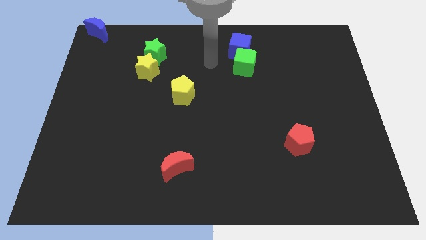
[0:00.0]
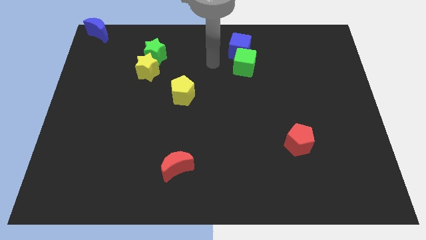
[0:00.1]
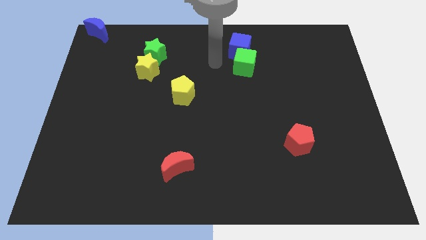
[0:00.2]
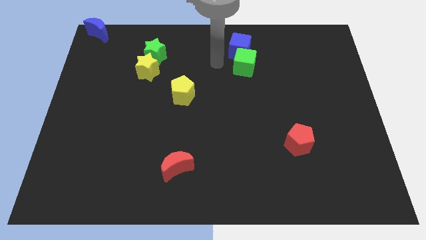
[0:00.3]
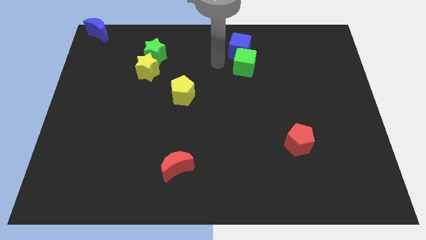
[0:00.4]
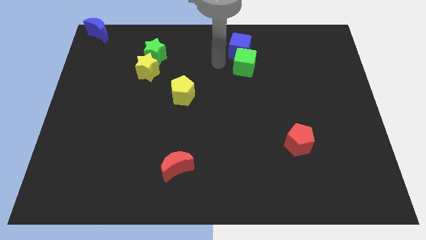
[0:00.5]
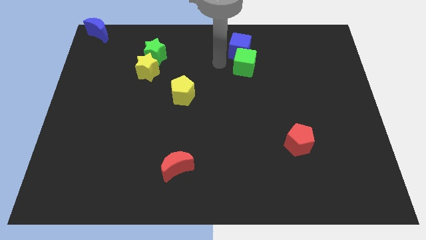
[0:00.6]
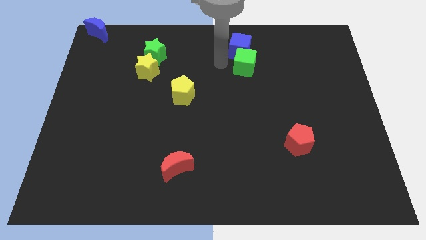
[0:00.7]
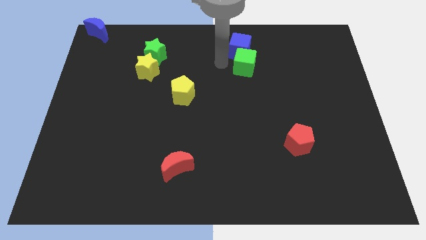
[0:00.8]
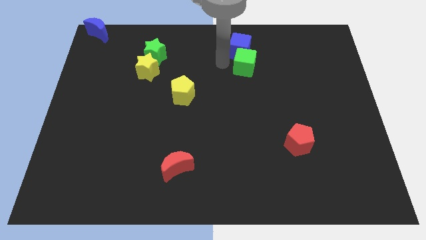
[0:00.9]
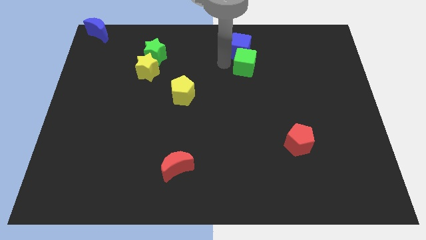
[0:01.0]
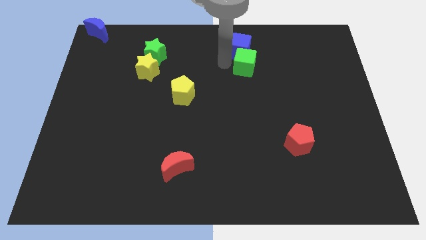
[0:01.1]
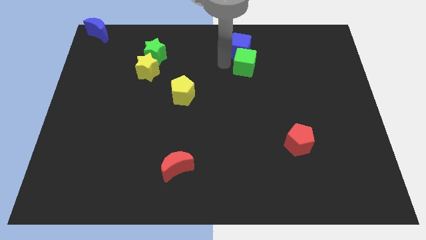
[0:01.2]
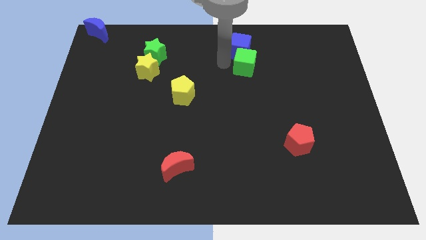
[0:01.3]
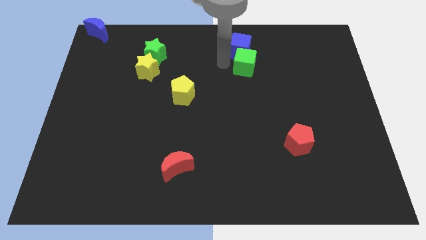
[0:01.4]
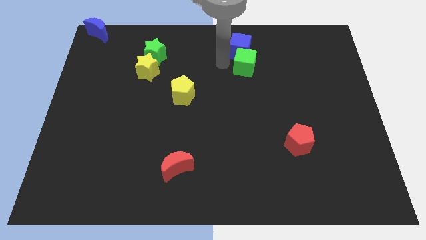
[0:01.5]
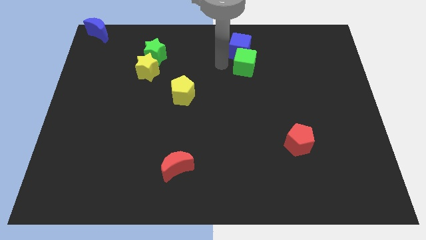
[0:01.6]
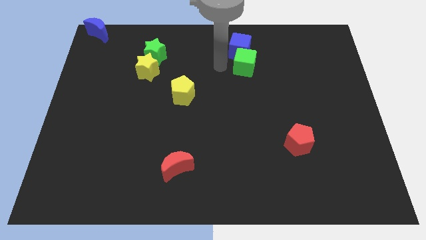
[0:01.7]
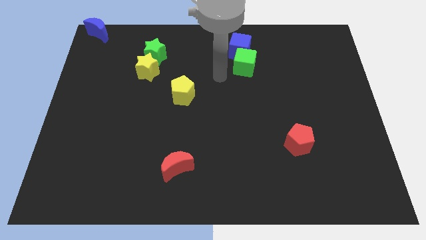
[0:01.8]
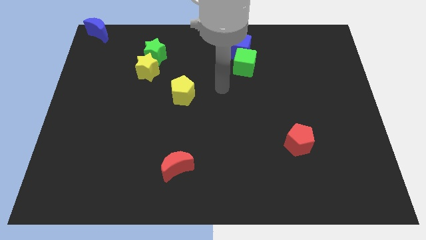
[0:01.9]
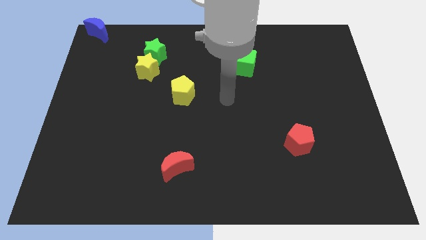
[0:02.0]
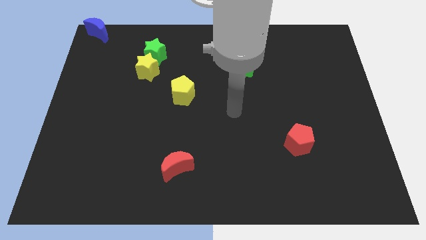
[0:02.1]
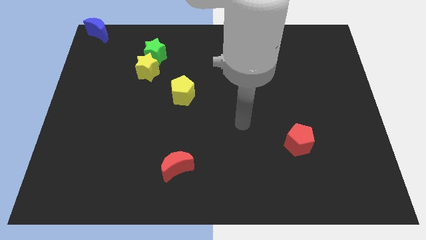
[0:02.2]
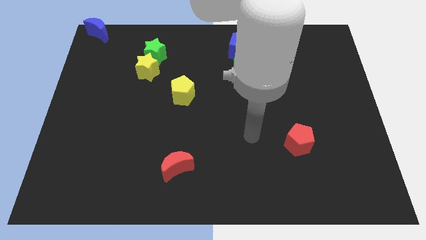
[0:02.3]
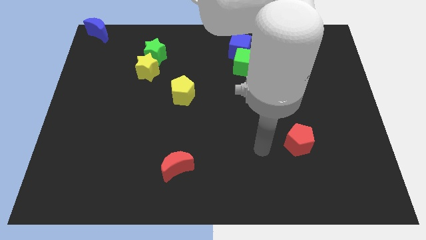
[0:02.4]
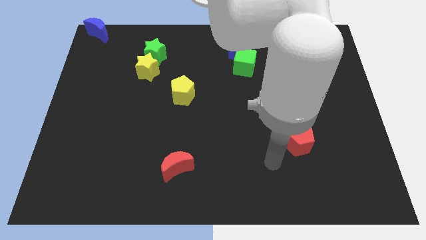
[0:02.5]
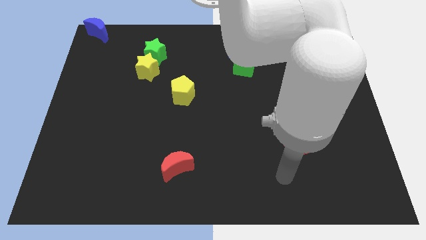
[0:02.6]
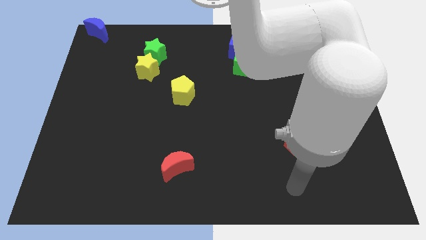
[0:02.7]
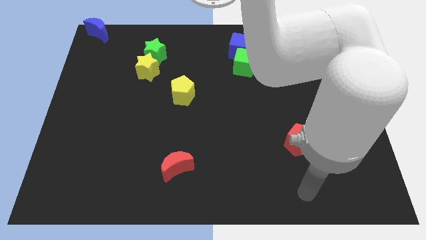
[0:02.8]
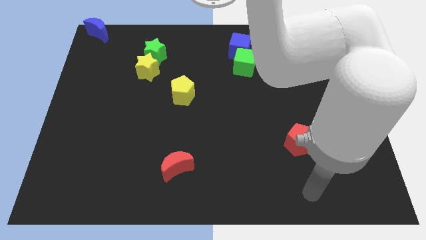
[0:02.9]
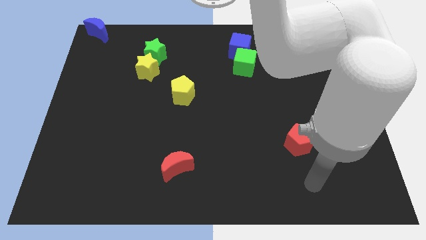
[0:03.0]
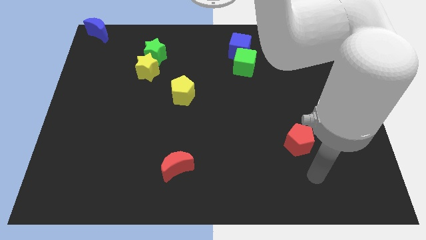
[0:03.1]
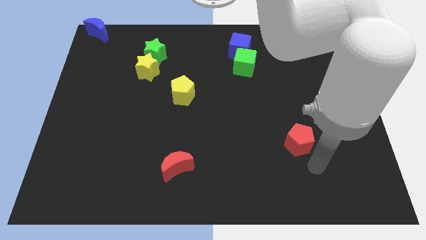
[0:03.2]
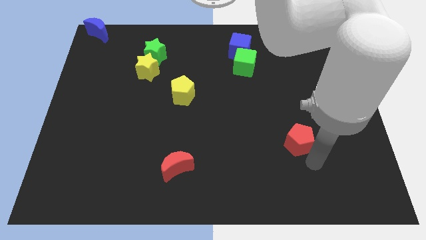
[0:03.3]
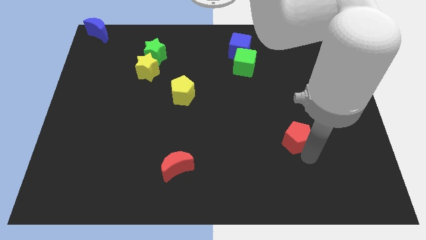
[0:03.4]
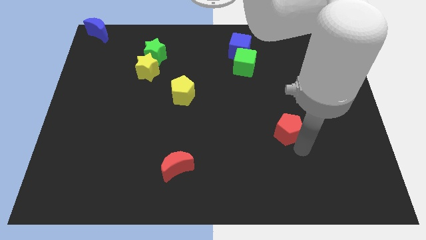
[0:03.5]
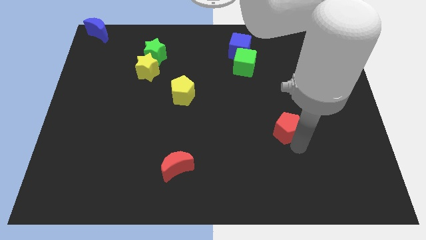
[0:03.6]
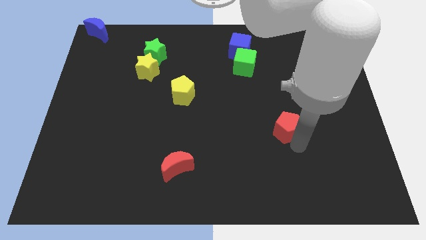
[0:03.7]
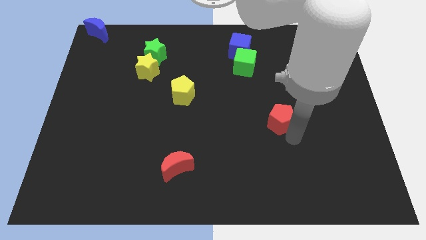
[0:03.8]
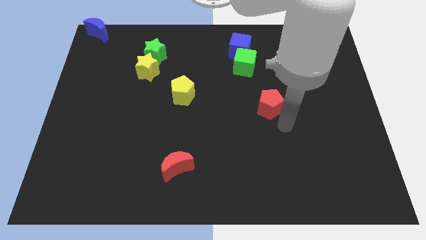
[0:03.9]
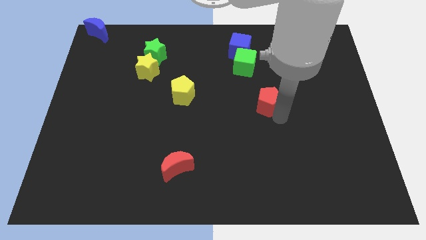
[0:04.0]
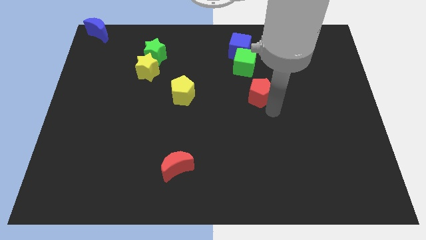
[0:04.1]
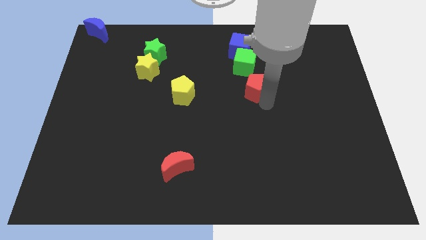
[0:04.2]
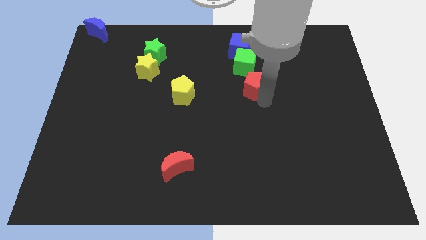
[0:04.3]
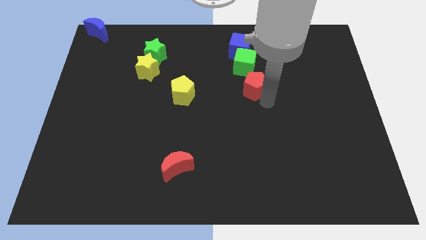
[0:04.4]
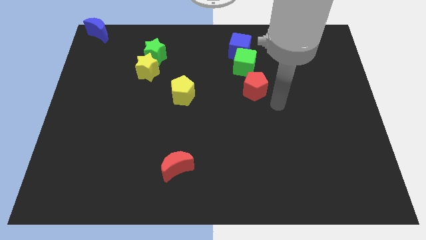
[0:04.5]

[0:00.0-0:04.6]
push the red pentagon to bottom right of green cube

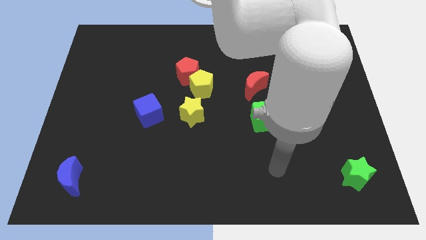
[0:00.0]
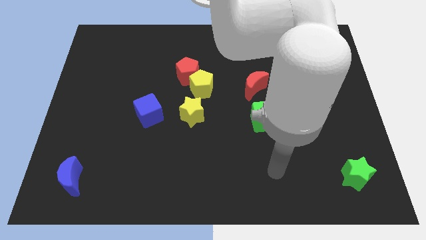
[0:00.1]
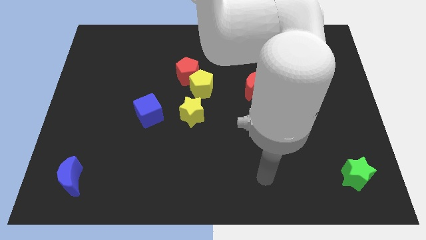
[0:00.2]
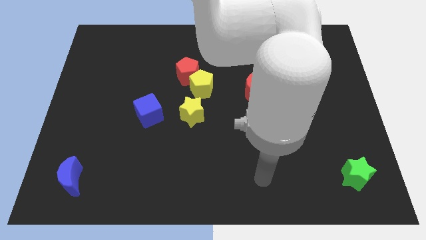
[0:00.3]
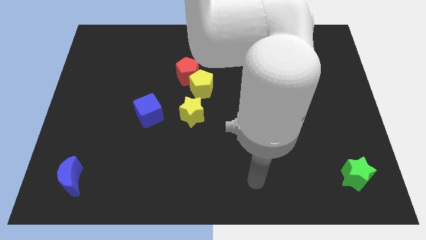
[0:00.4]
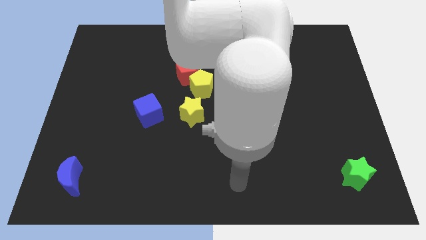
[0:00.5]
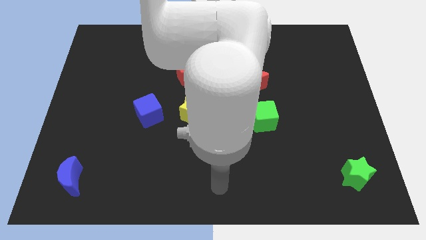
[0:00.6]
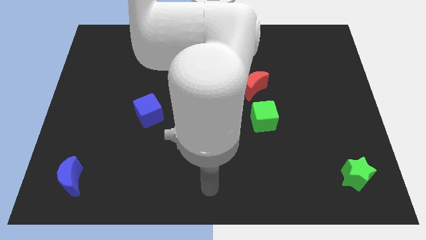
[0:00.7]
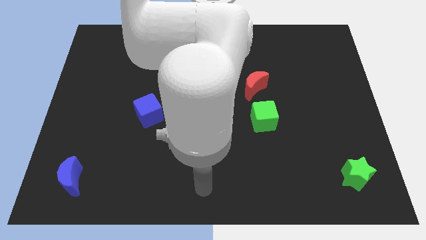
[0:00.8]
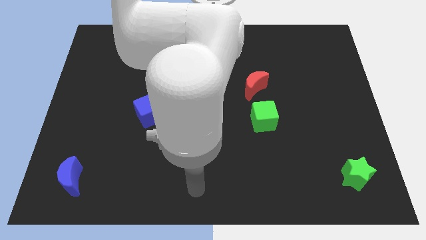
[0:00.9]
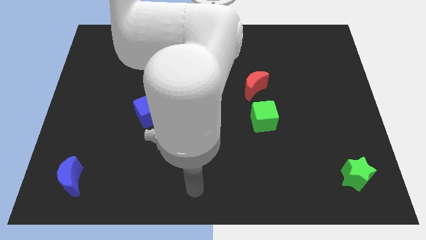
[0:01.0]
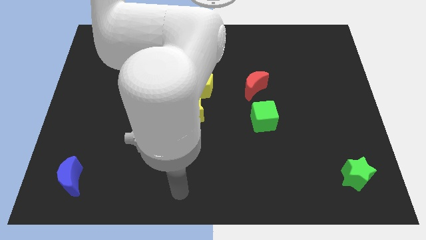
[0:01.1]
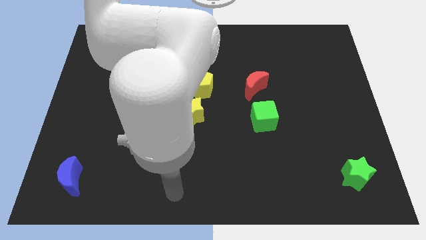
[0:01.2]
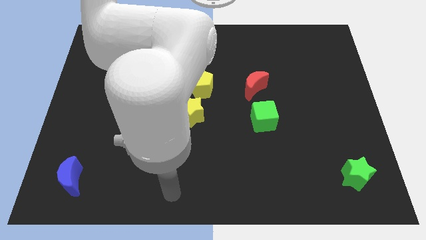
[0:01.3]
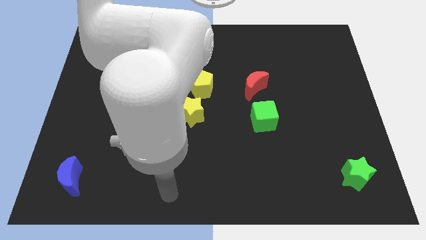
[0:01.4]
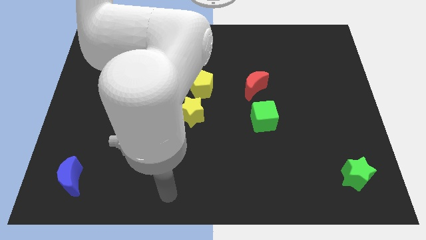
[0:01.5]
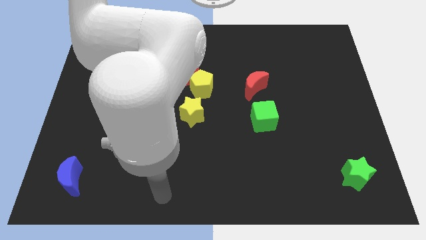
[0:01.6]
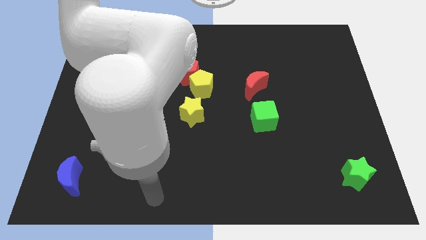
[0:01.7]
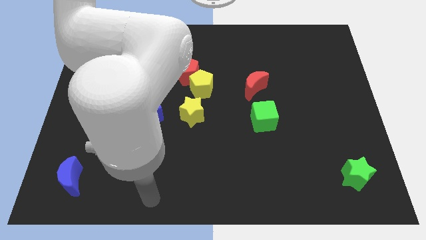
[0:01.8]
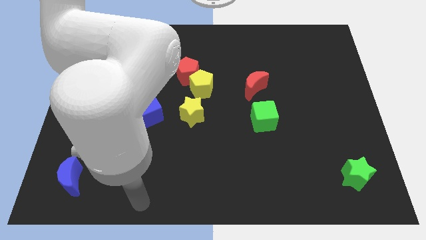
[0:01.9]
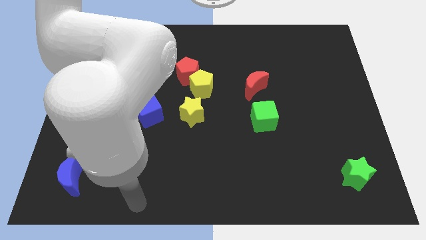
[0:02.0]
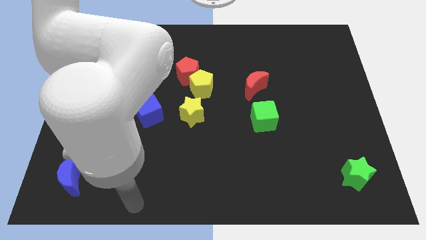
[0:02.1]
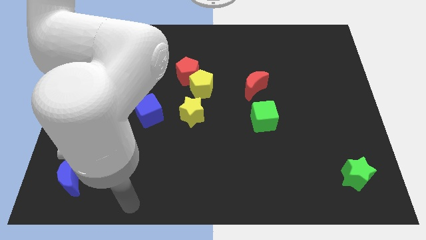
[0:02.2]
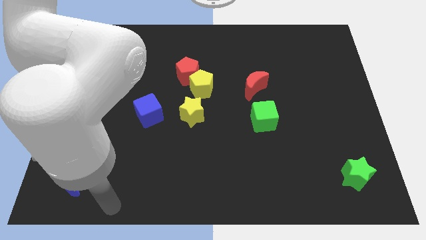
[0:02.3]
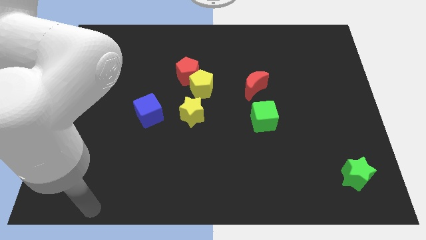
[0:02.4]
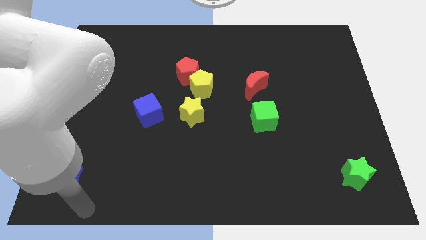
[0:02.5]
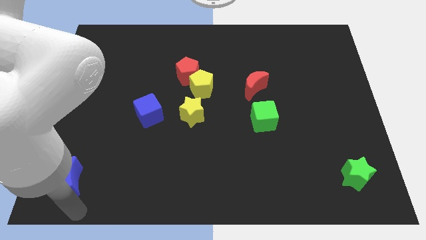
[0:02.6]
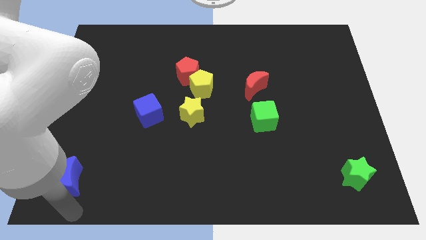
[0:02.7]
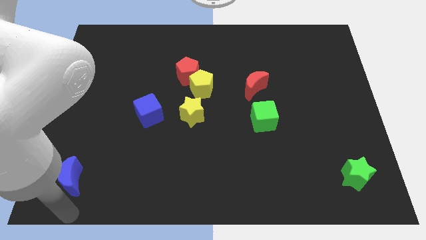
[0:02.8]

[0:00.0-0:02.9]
place your arm to the bottom of the blue moon

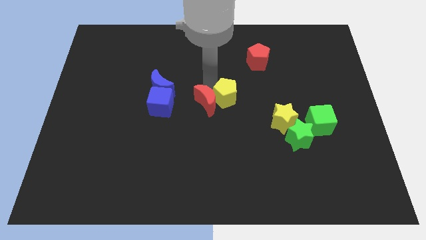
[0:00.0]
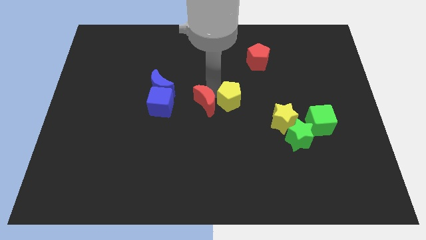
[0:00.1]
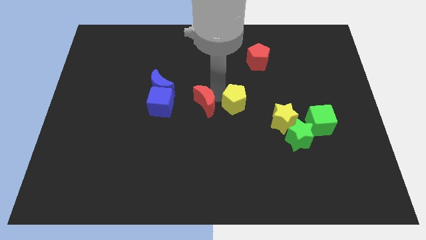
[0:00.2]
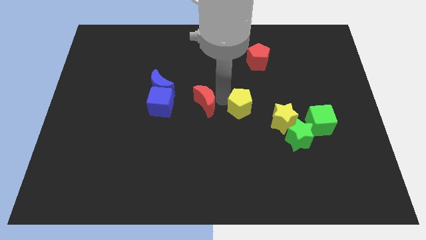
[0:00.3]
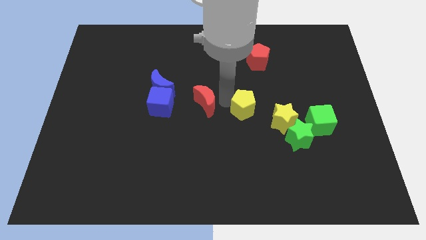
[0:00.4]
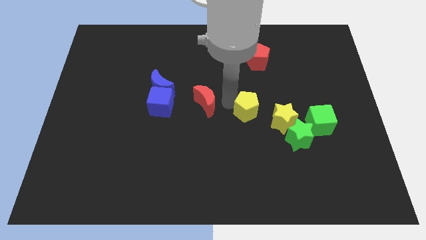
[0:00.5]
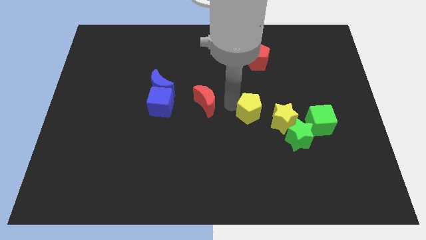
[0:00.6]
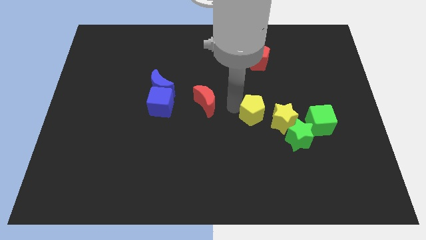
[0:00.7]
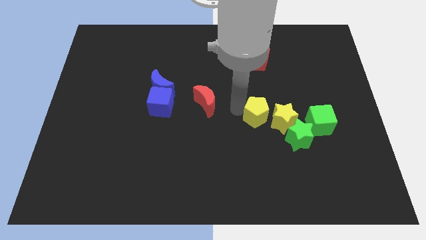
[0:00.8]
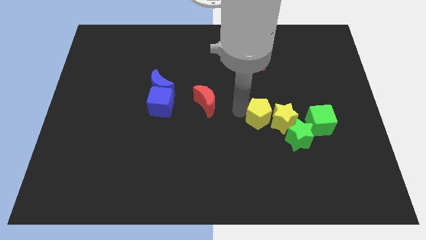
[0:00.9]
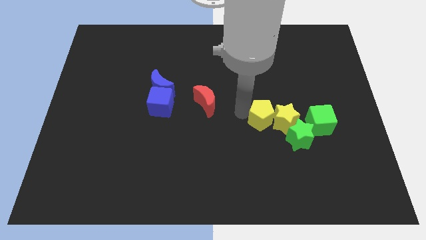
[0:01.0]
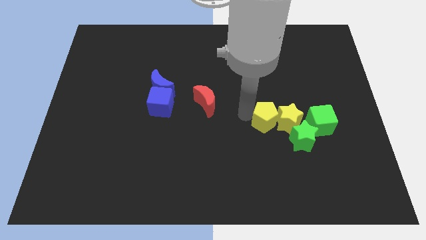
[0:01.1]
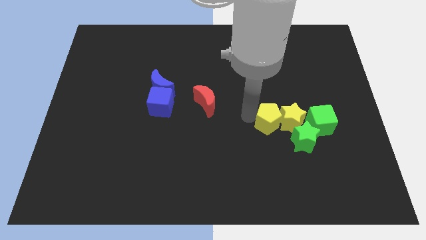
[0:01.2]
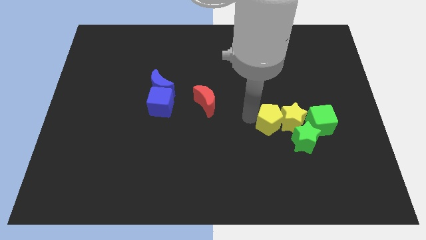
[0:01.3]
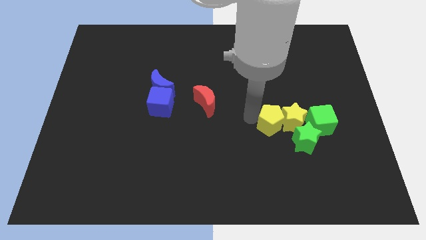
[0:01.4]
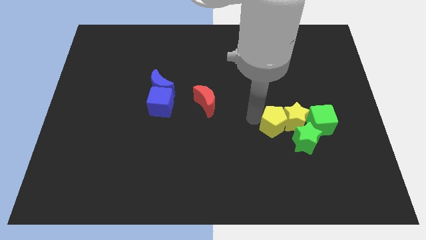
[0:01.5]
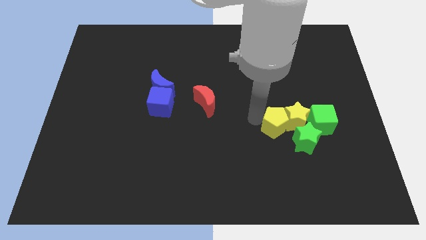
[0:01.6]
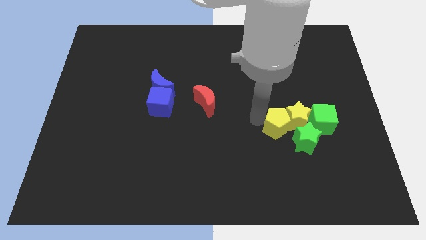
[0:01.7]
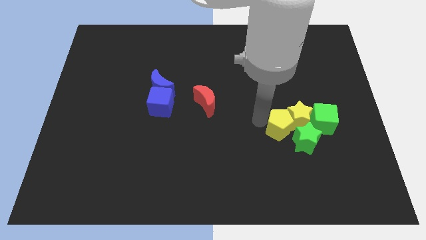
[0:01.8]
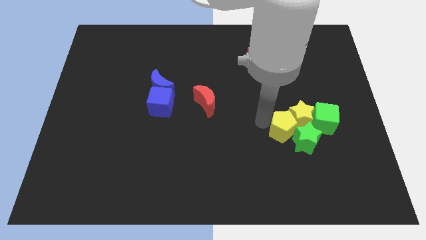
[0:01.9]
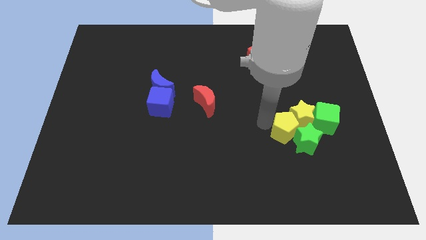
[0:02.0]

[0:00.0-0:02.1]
place the yellow pentagon beside the yellow star
